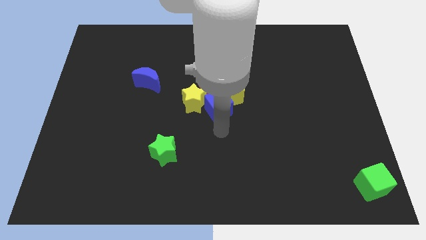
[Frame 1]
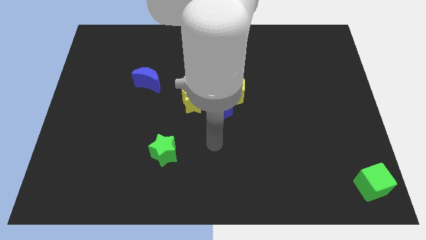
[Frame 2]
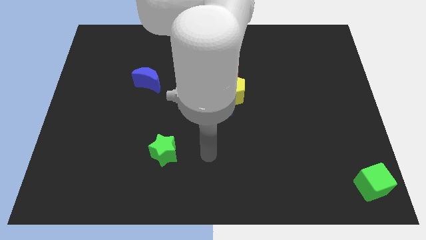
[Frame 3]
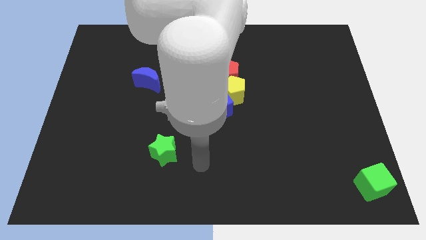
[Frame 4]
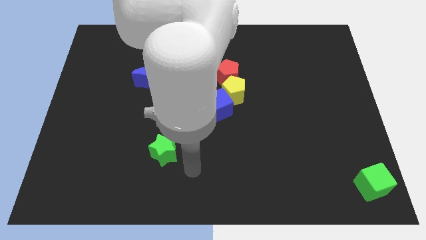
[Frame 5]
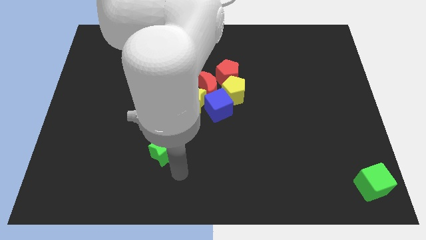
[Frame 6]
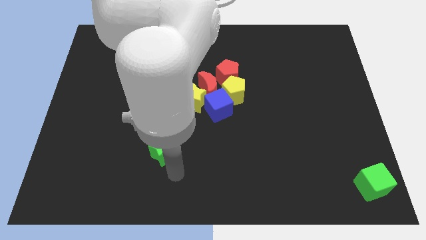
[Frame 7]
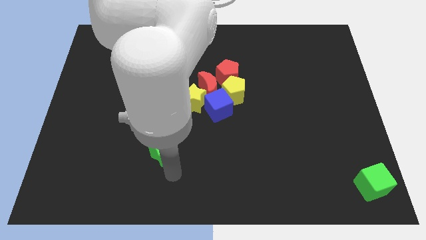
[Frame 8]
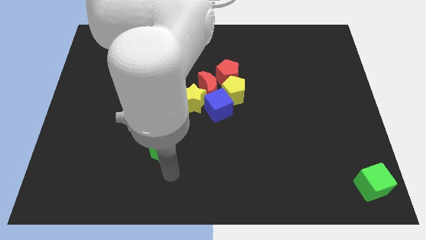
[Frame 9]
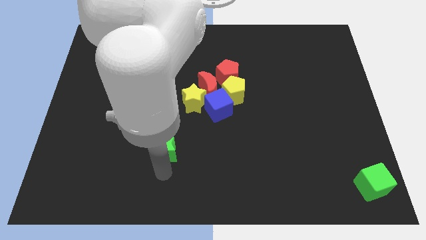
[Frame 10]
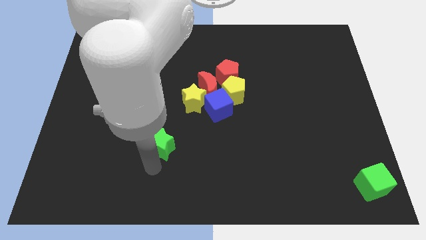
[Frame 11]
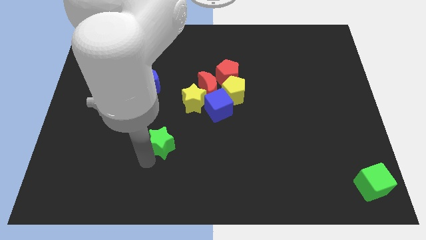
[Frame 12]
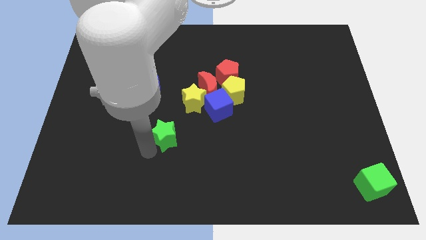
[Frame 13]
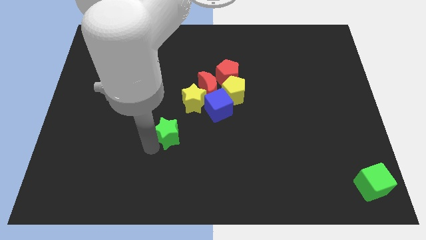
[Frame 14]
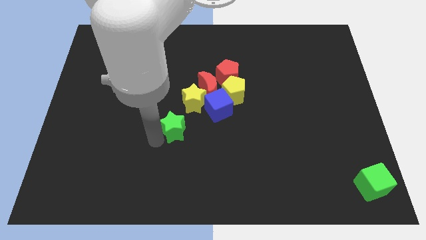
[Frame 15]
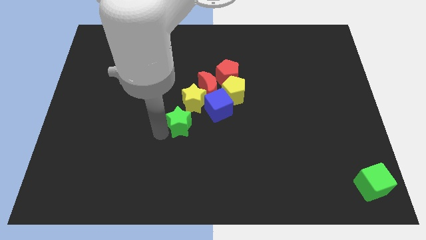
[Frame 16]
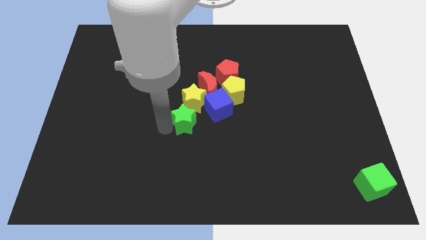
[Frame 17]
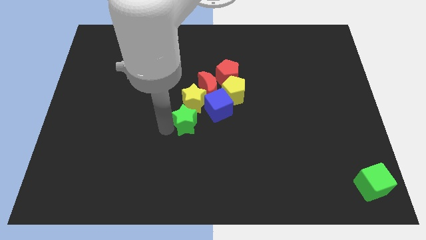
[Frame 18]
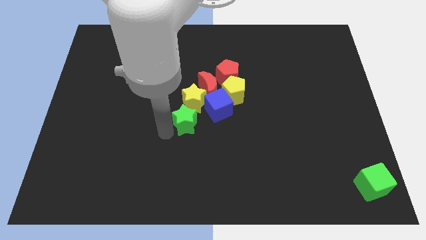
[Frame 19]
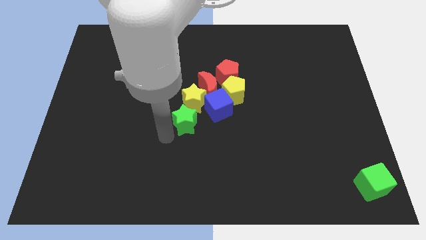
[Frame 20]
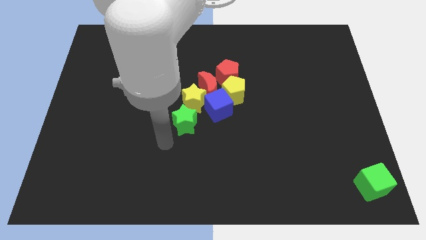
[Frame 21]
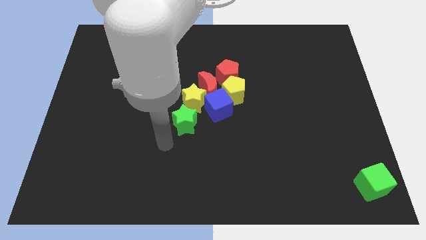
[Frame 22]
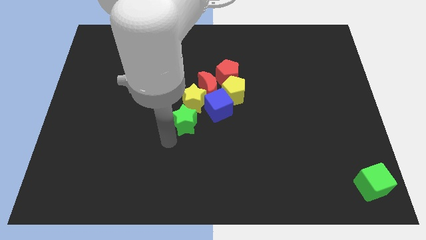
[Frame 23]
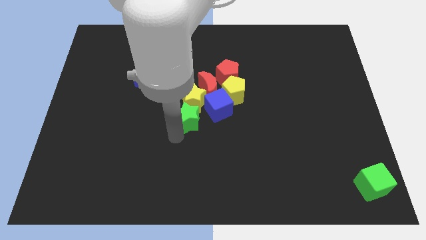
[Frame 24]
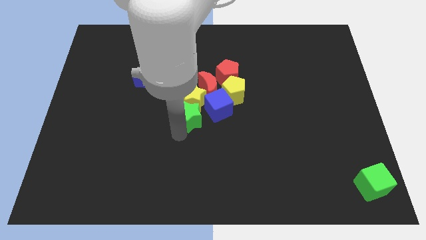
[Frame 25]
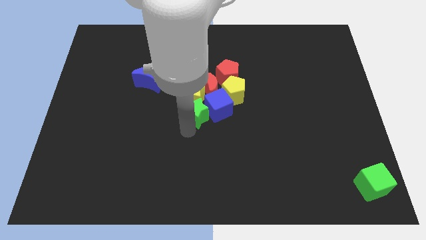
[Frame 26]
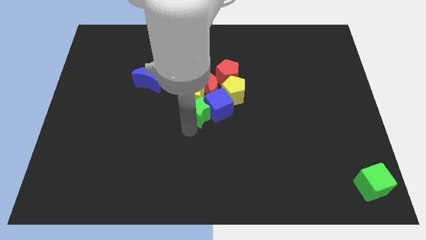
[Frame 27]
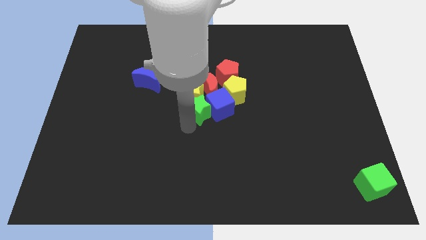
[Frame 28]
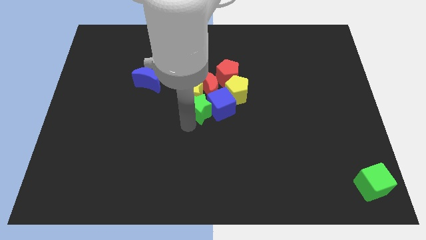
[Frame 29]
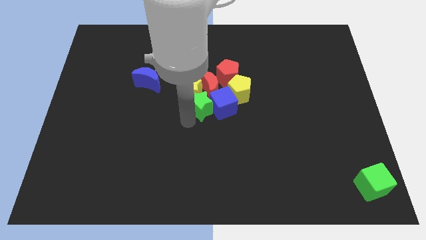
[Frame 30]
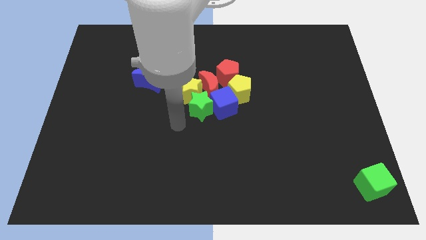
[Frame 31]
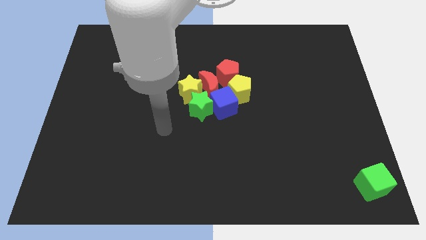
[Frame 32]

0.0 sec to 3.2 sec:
slide the green star into the yellow star

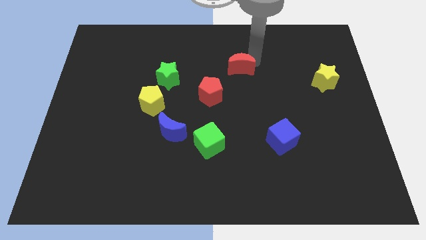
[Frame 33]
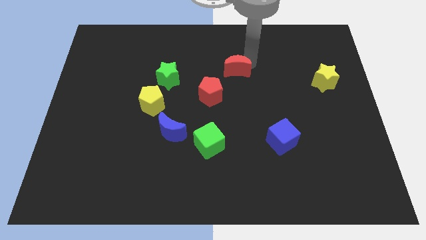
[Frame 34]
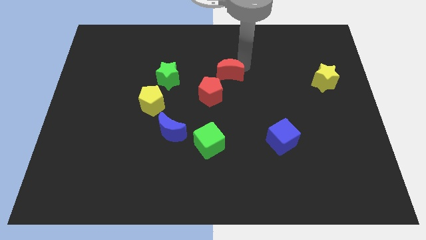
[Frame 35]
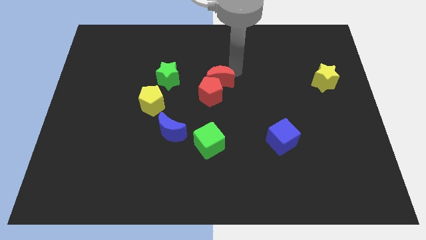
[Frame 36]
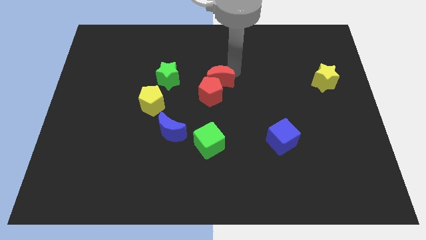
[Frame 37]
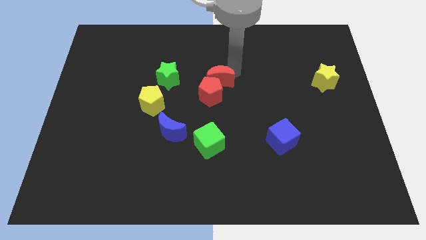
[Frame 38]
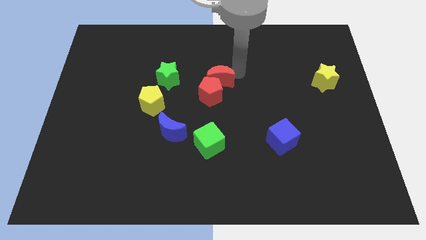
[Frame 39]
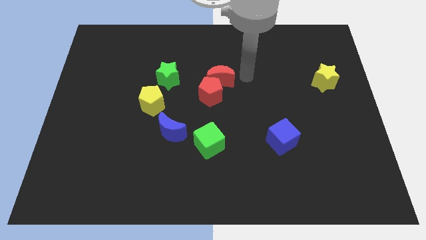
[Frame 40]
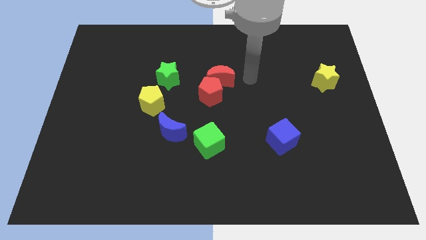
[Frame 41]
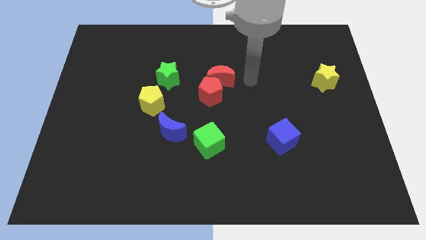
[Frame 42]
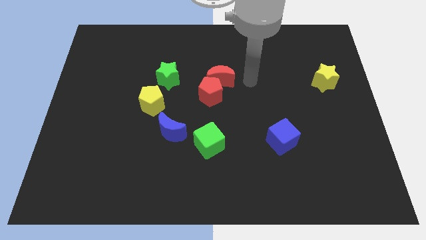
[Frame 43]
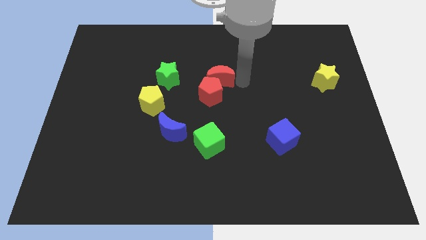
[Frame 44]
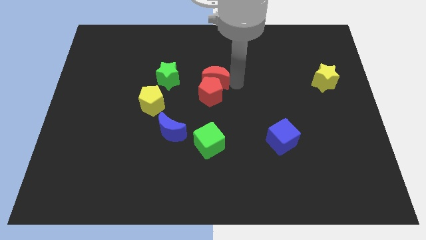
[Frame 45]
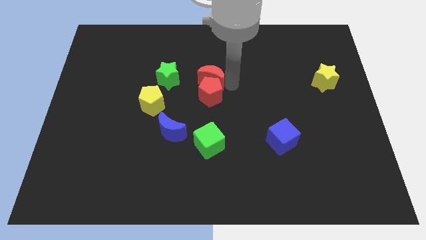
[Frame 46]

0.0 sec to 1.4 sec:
push the red crescent into the red pentagon

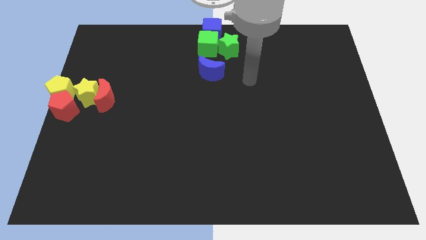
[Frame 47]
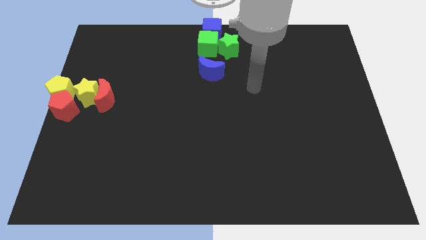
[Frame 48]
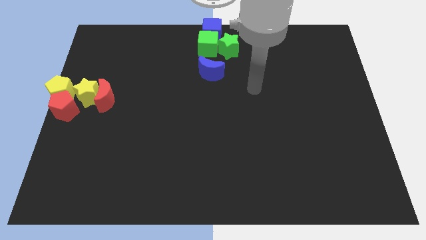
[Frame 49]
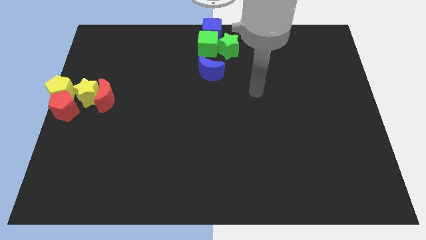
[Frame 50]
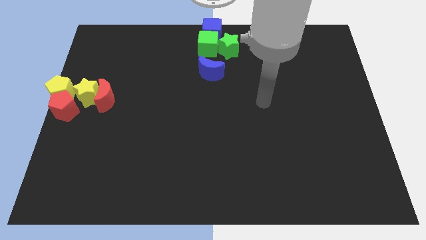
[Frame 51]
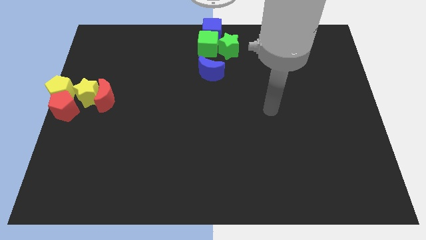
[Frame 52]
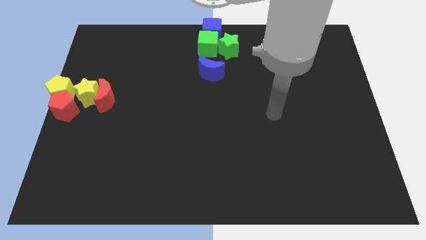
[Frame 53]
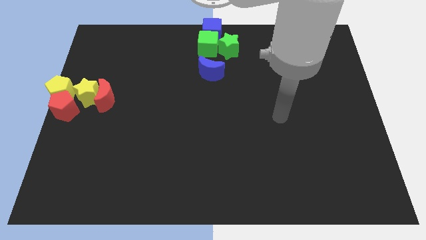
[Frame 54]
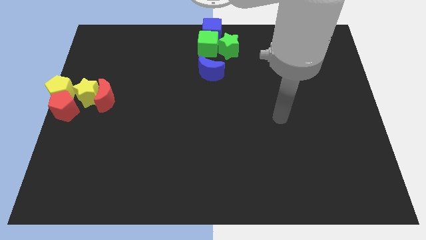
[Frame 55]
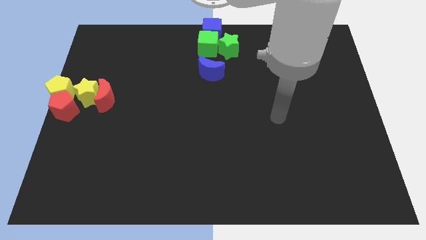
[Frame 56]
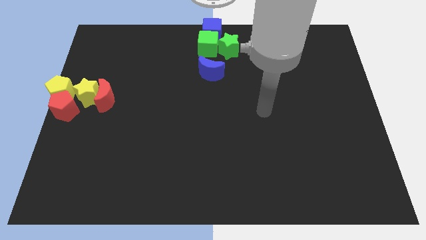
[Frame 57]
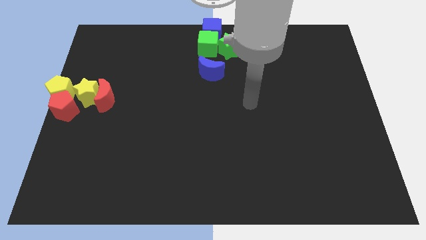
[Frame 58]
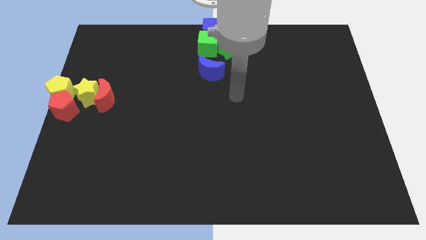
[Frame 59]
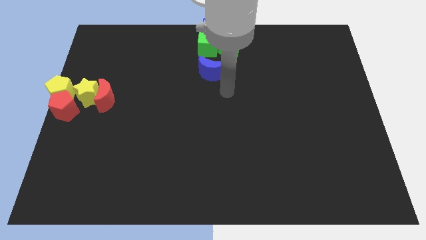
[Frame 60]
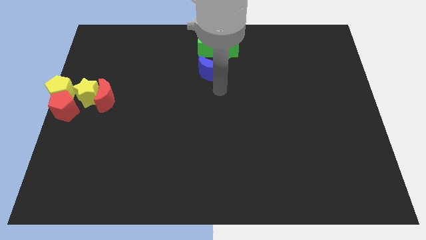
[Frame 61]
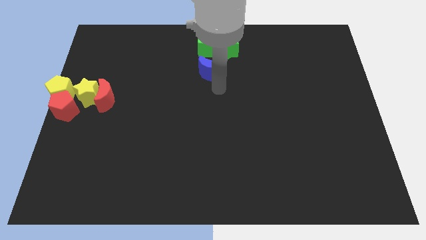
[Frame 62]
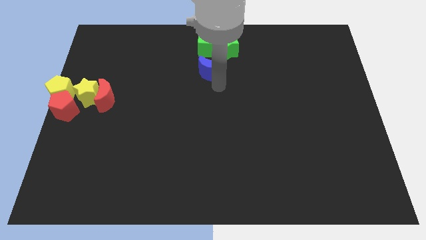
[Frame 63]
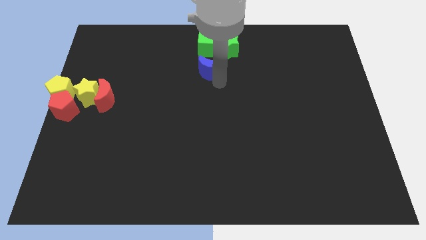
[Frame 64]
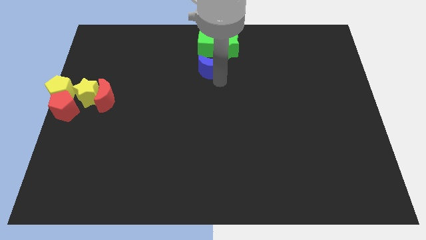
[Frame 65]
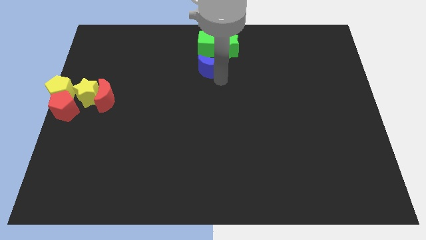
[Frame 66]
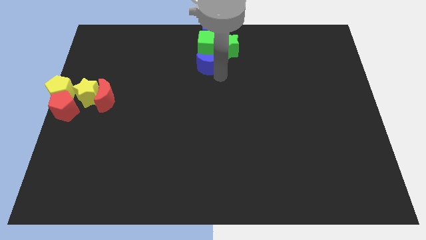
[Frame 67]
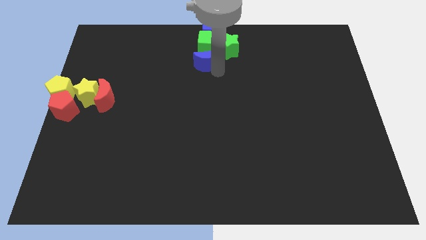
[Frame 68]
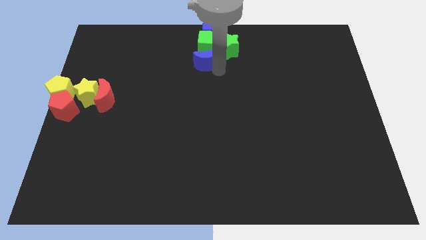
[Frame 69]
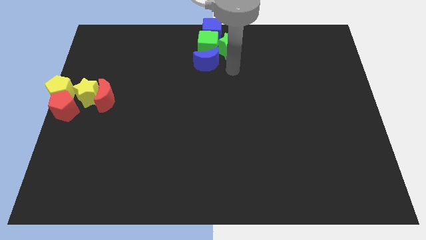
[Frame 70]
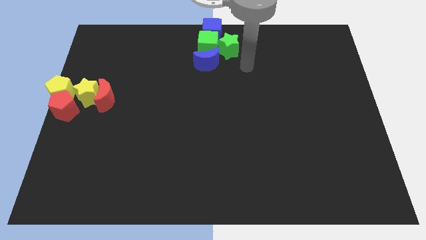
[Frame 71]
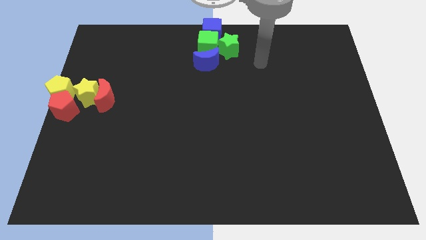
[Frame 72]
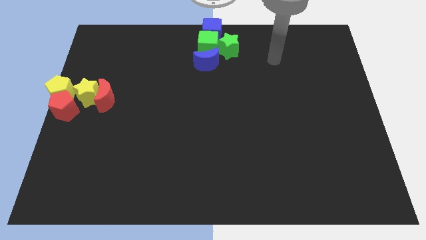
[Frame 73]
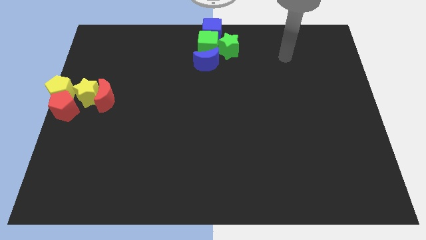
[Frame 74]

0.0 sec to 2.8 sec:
move the blue crescent to the top center of the board

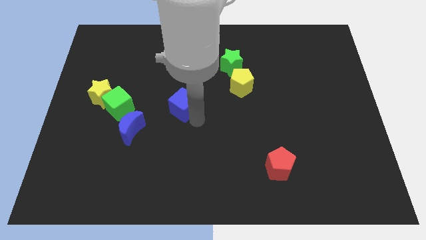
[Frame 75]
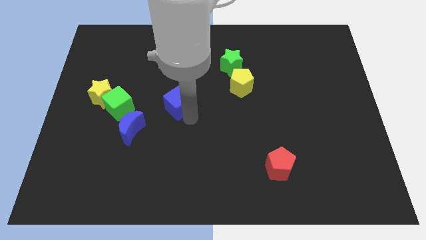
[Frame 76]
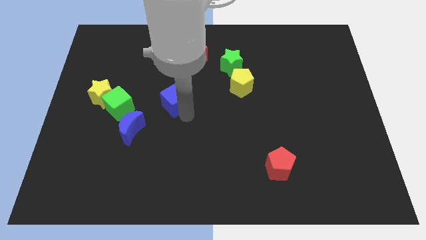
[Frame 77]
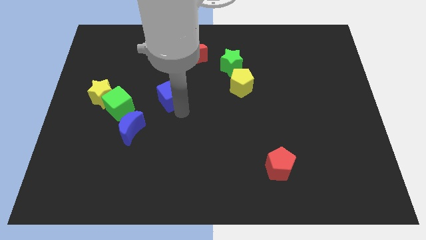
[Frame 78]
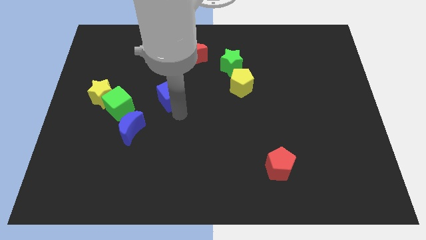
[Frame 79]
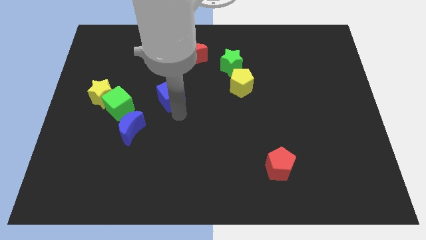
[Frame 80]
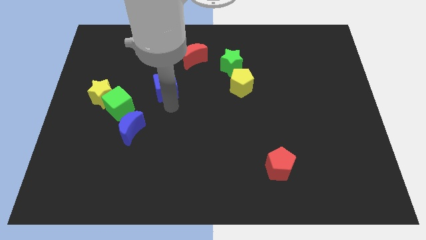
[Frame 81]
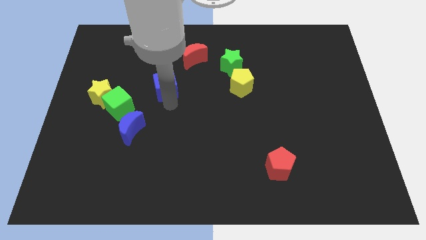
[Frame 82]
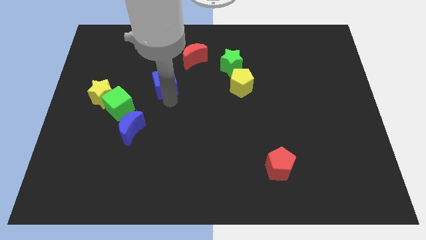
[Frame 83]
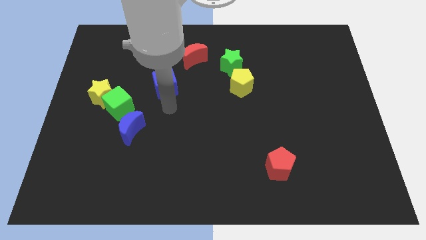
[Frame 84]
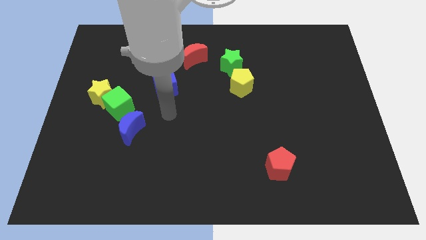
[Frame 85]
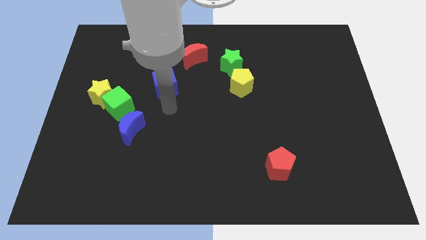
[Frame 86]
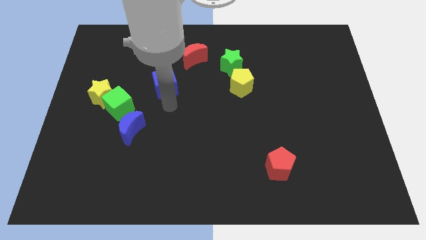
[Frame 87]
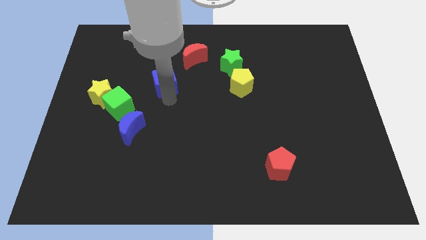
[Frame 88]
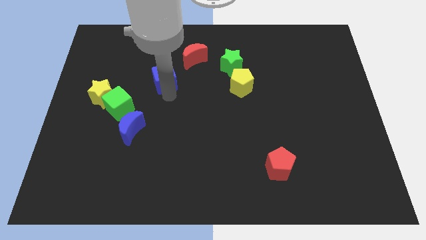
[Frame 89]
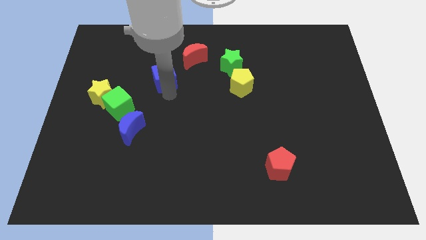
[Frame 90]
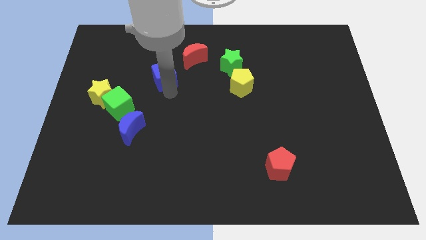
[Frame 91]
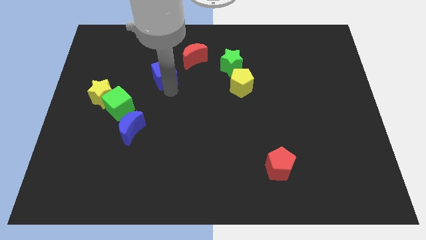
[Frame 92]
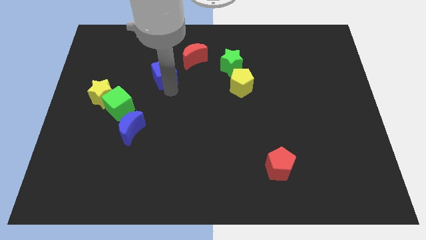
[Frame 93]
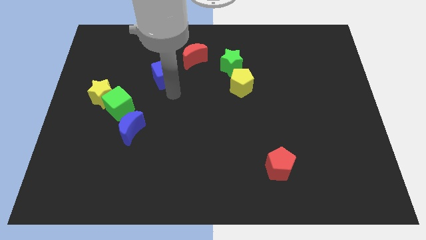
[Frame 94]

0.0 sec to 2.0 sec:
push the blue cube towards the left to the red crescent
